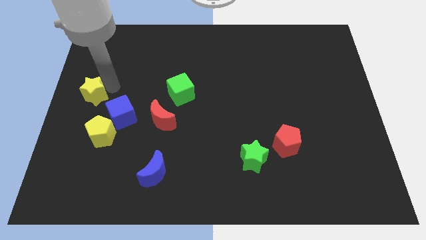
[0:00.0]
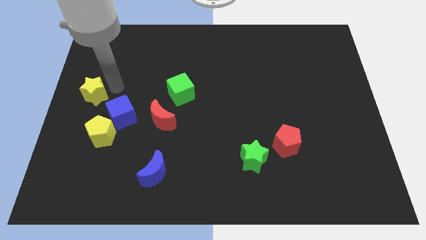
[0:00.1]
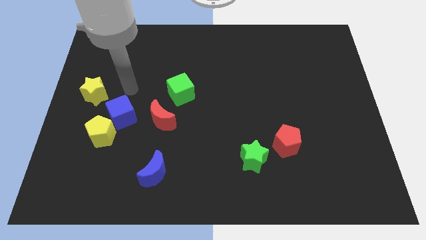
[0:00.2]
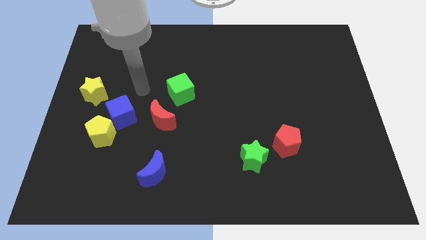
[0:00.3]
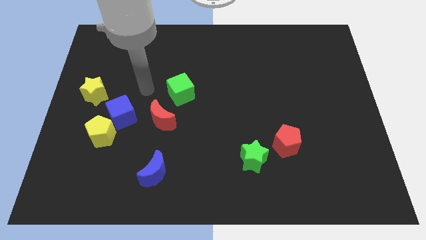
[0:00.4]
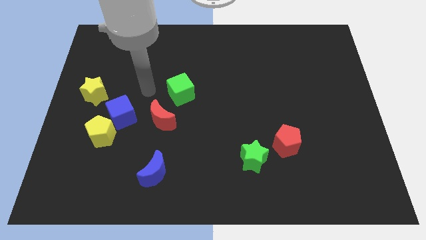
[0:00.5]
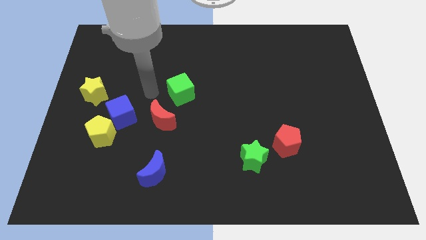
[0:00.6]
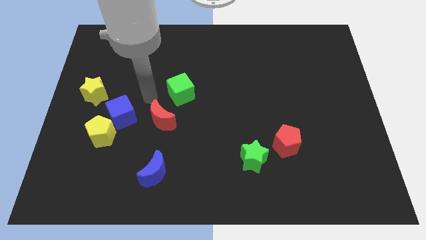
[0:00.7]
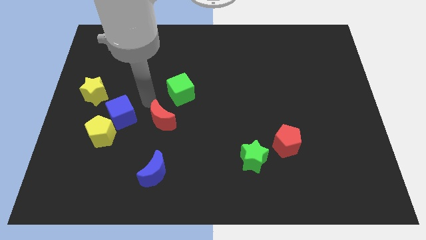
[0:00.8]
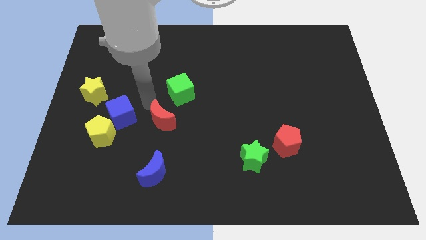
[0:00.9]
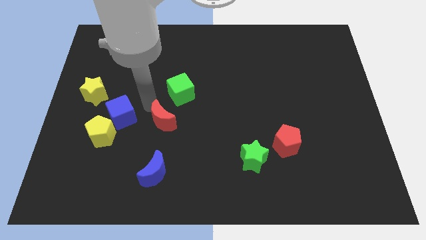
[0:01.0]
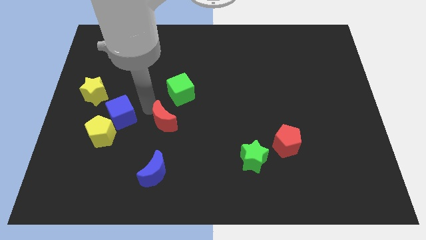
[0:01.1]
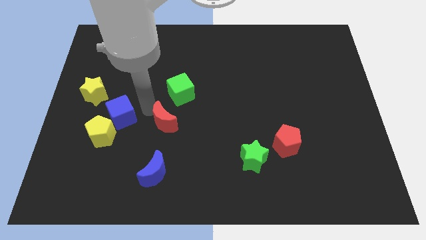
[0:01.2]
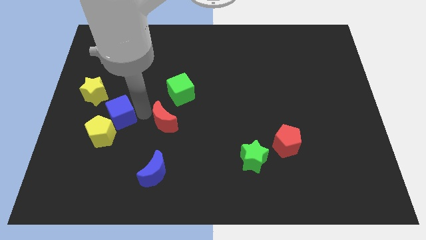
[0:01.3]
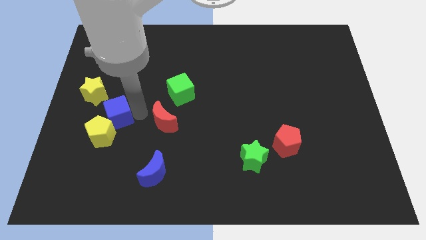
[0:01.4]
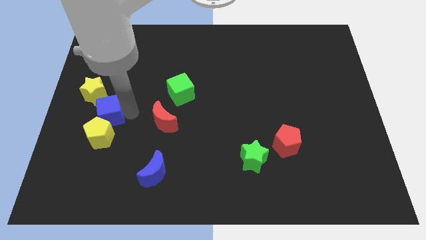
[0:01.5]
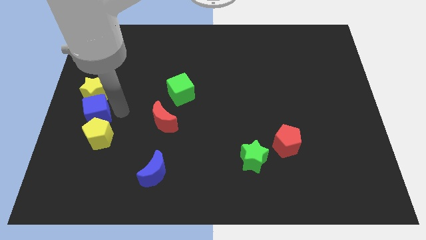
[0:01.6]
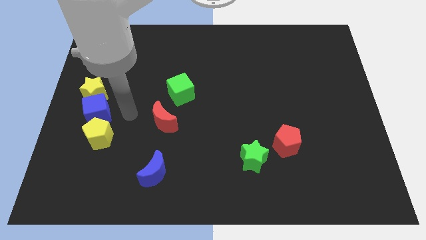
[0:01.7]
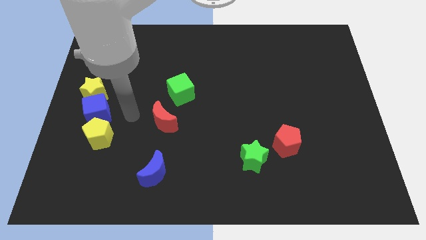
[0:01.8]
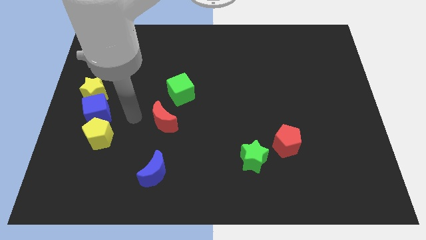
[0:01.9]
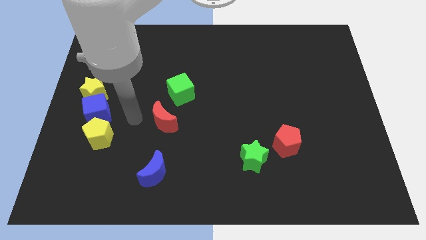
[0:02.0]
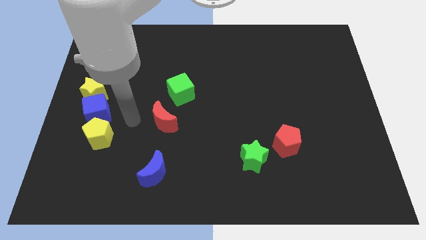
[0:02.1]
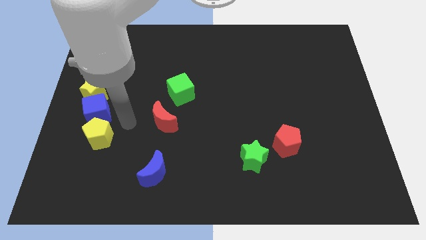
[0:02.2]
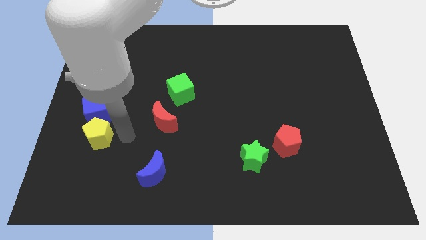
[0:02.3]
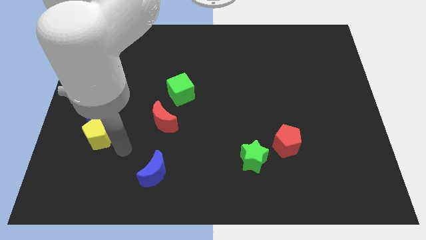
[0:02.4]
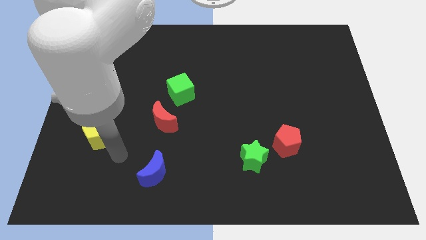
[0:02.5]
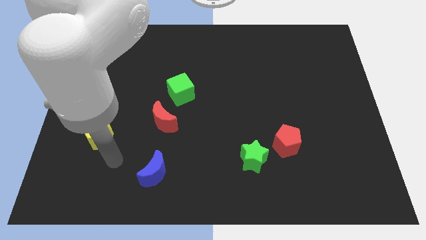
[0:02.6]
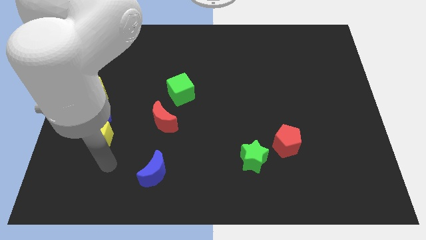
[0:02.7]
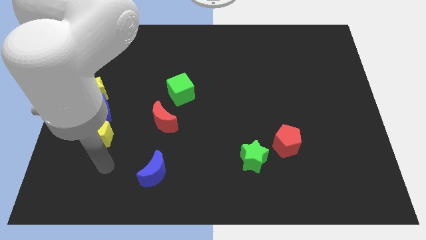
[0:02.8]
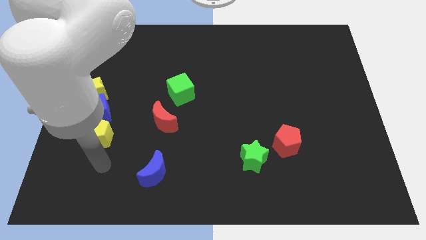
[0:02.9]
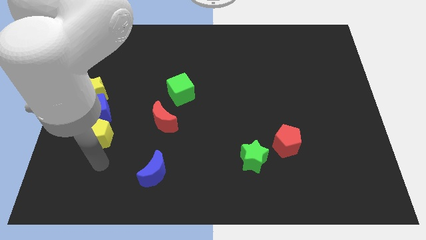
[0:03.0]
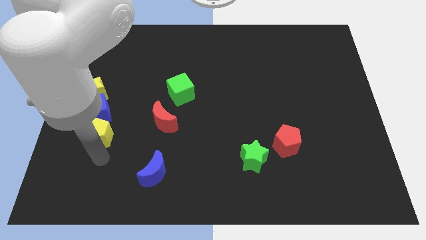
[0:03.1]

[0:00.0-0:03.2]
slide the blue cube in between the yellow blocks

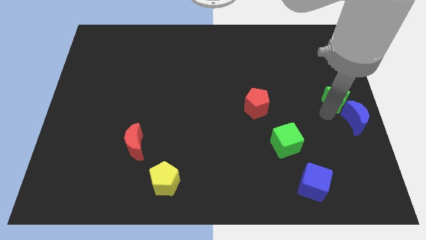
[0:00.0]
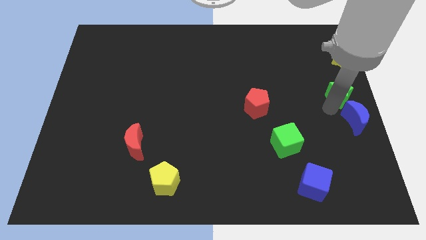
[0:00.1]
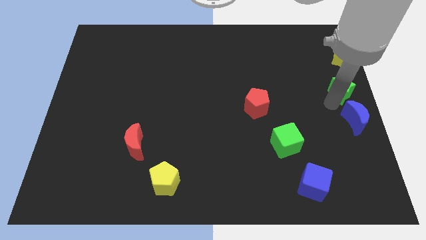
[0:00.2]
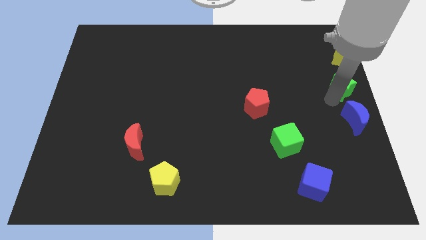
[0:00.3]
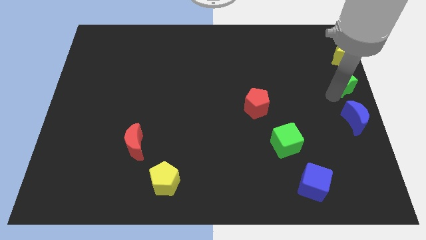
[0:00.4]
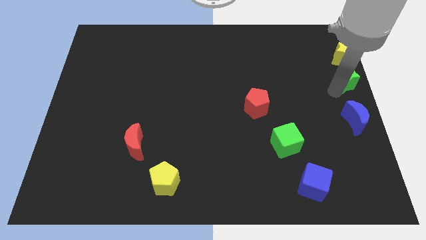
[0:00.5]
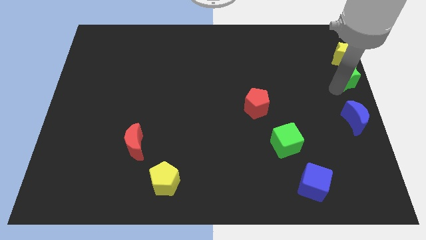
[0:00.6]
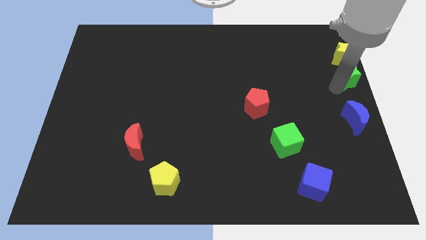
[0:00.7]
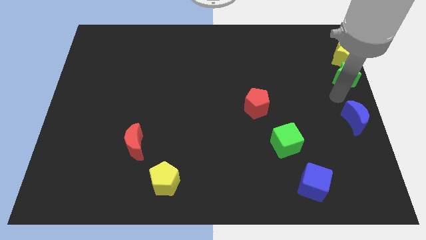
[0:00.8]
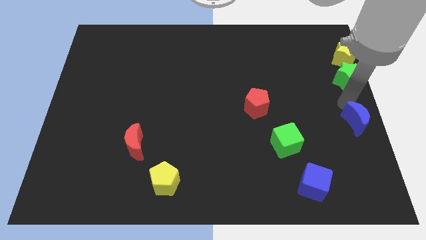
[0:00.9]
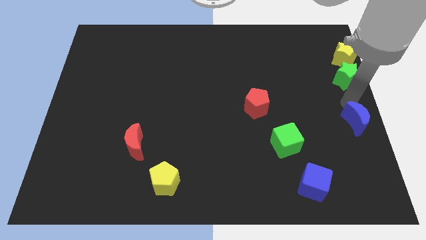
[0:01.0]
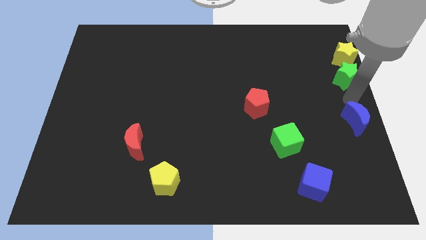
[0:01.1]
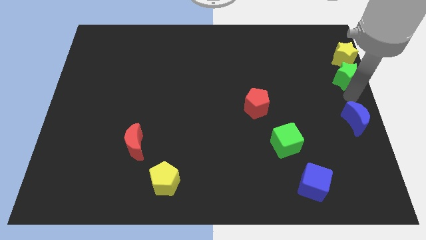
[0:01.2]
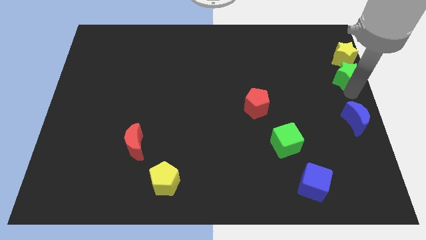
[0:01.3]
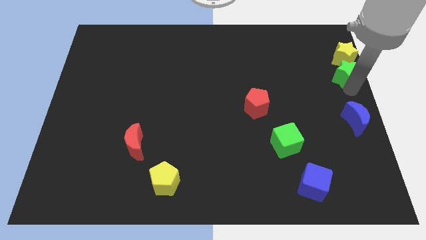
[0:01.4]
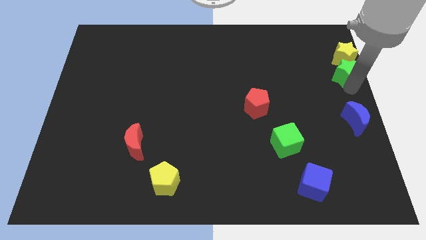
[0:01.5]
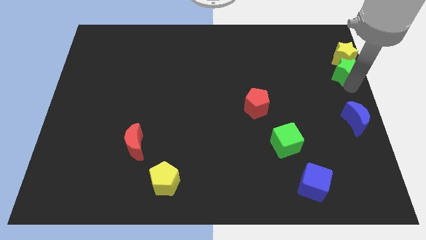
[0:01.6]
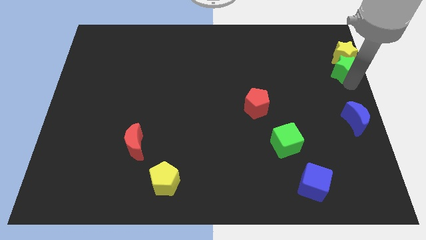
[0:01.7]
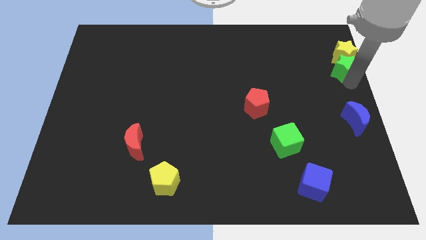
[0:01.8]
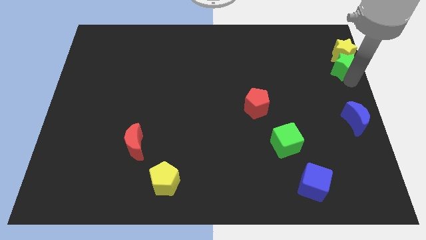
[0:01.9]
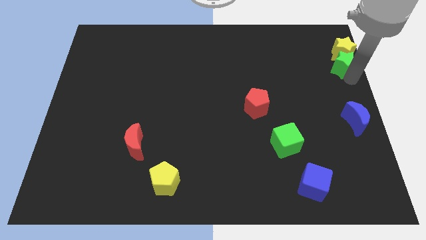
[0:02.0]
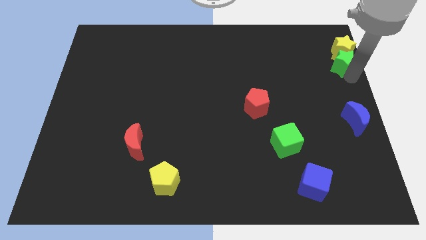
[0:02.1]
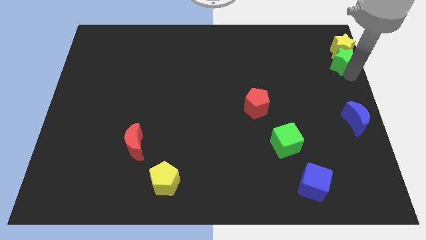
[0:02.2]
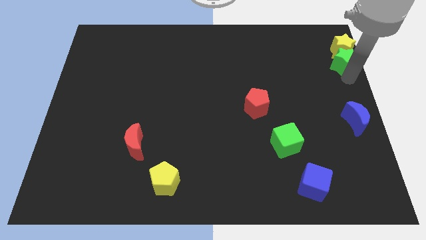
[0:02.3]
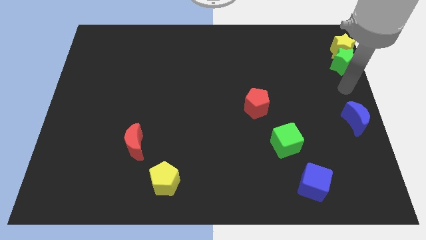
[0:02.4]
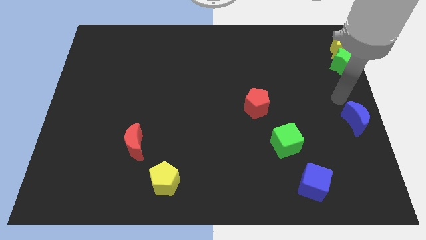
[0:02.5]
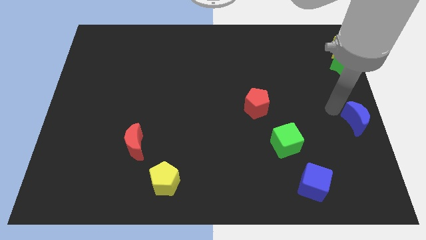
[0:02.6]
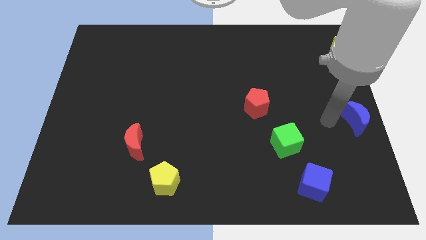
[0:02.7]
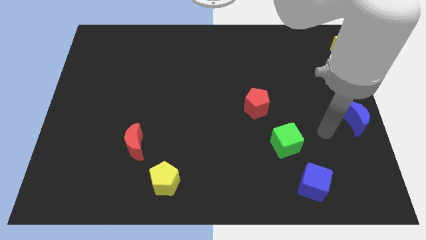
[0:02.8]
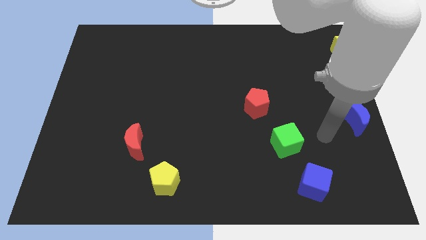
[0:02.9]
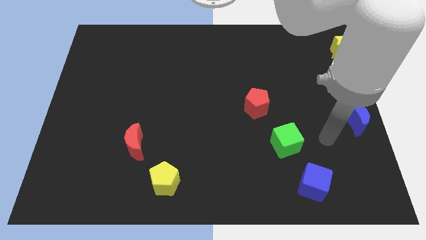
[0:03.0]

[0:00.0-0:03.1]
push the green star below to the yellow star

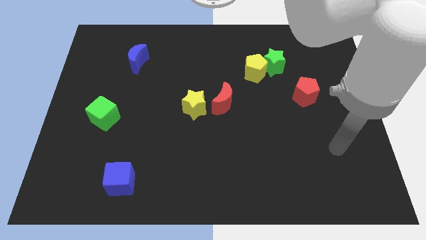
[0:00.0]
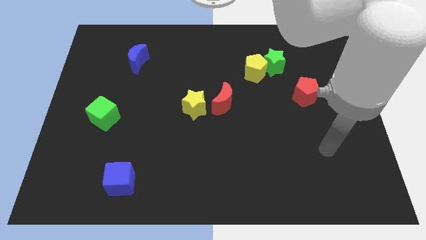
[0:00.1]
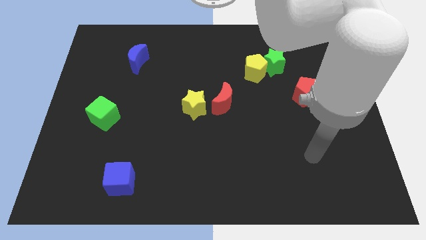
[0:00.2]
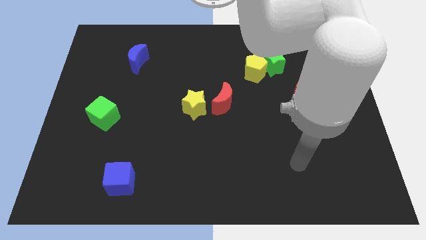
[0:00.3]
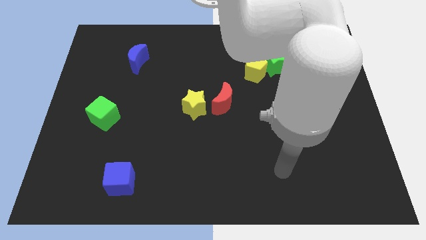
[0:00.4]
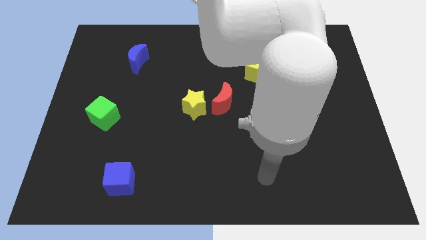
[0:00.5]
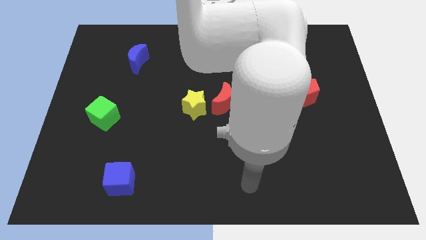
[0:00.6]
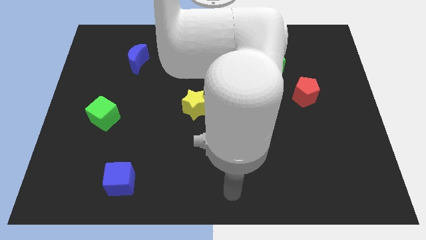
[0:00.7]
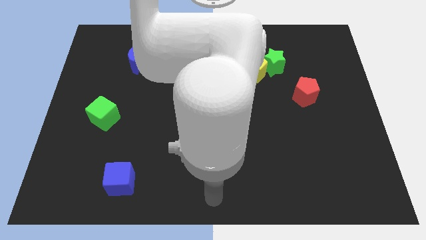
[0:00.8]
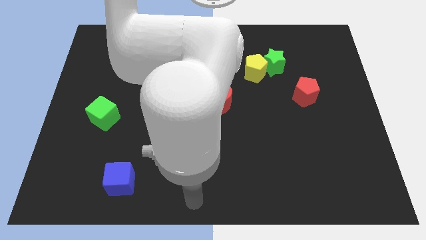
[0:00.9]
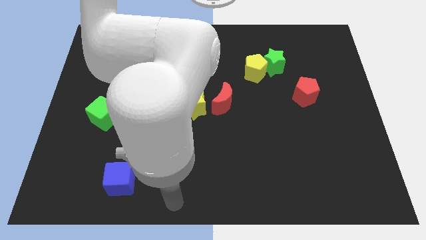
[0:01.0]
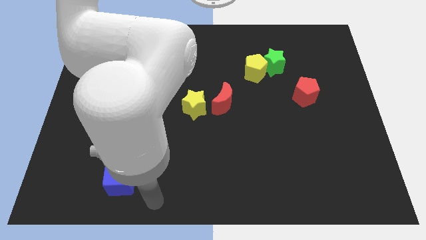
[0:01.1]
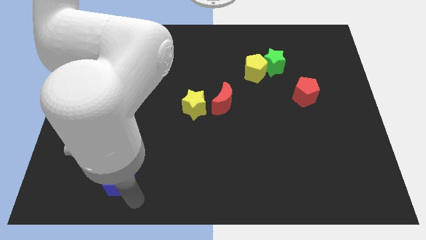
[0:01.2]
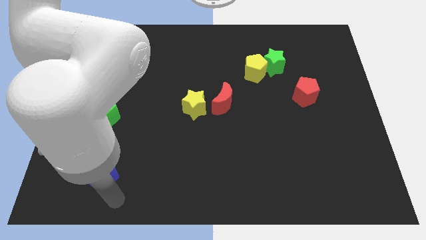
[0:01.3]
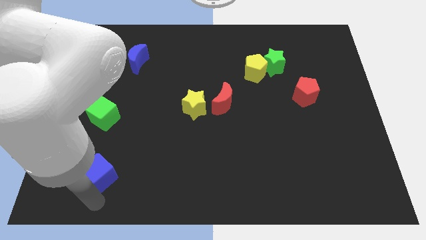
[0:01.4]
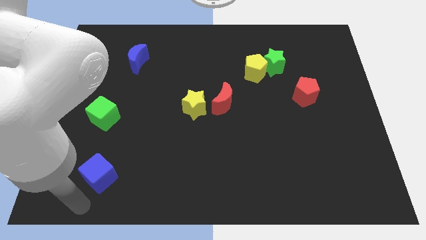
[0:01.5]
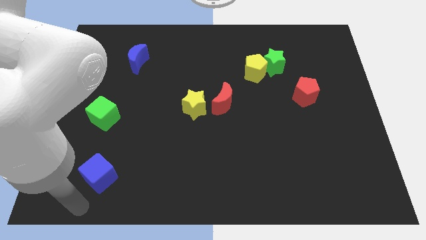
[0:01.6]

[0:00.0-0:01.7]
go and tap the blue cube

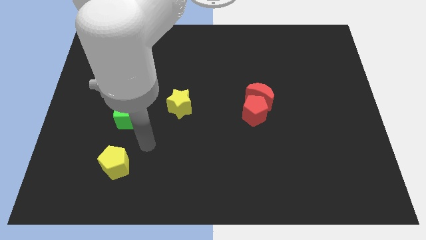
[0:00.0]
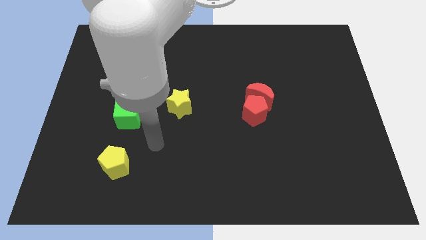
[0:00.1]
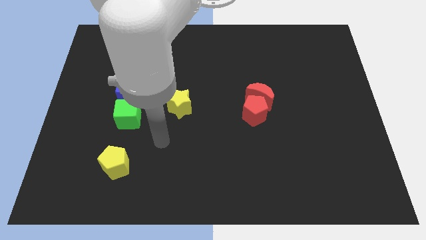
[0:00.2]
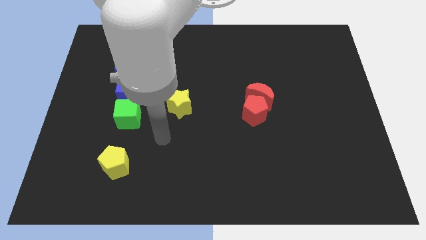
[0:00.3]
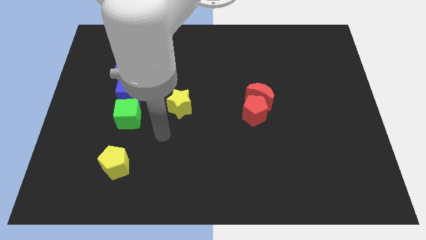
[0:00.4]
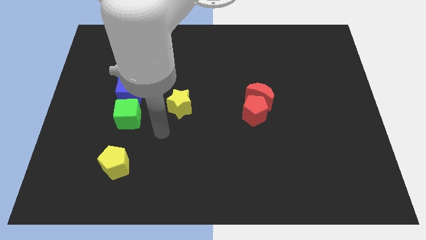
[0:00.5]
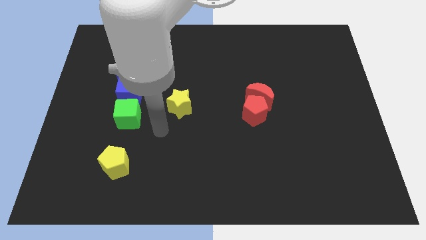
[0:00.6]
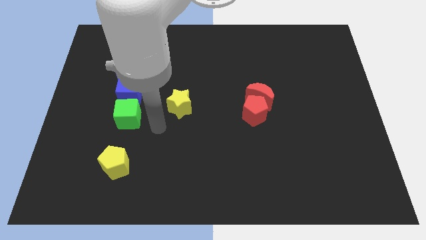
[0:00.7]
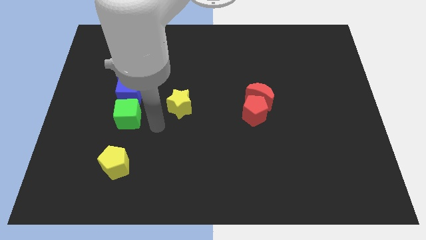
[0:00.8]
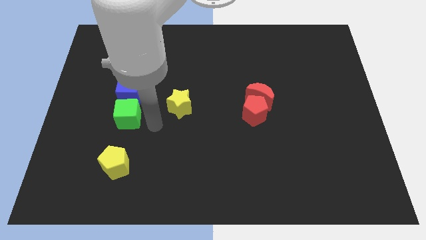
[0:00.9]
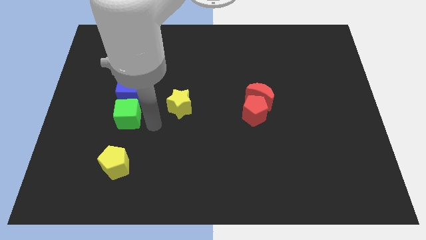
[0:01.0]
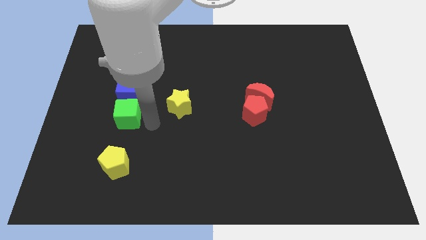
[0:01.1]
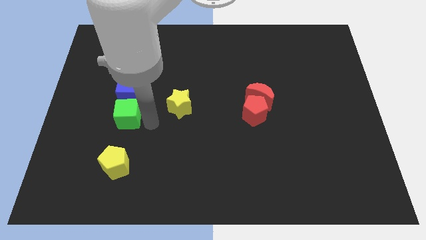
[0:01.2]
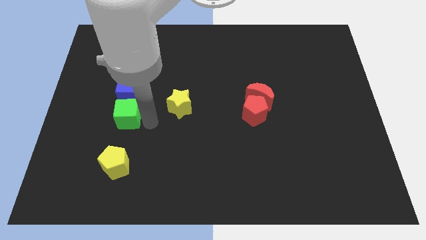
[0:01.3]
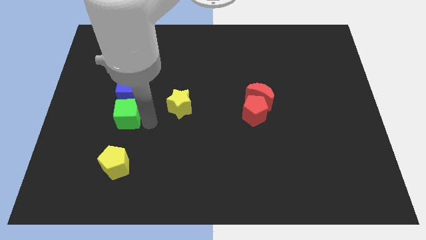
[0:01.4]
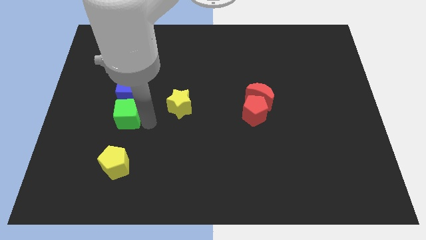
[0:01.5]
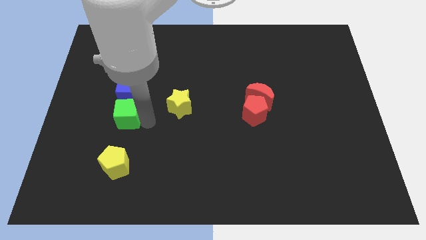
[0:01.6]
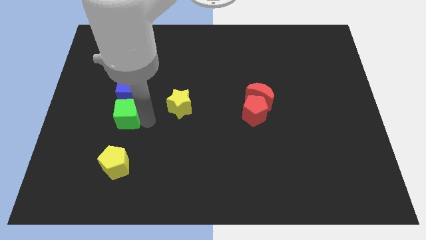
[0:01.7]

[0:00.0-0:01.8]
touch the right side of the green cube
